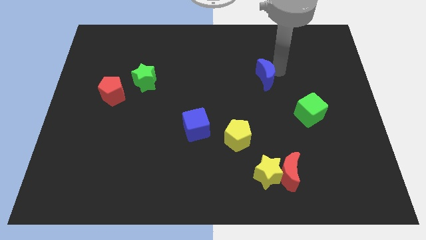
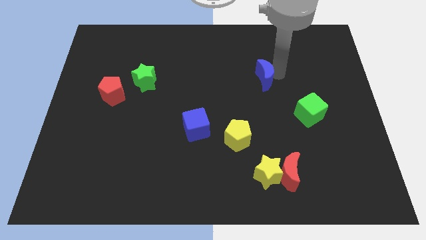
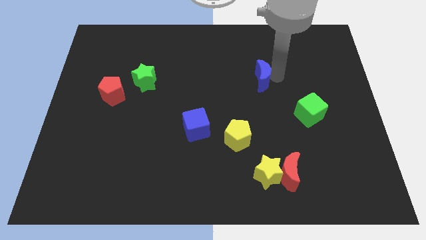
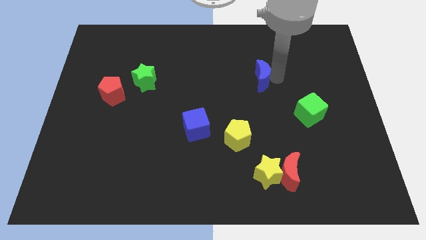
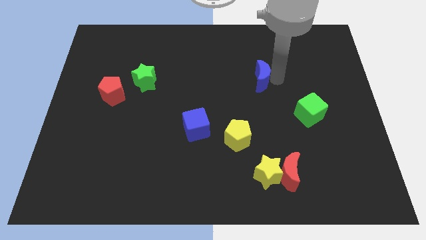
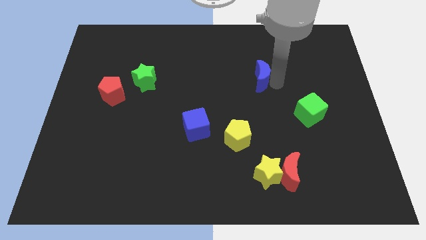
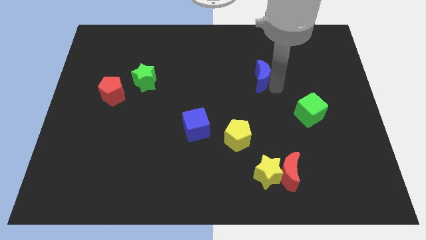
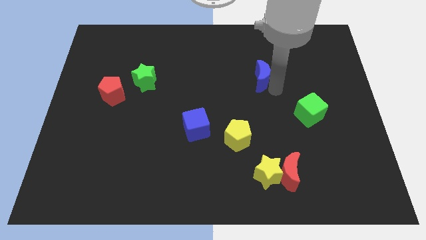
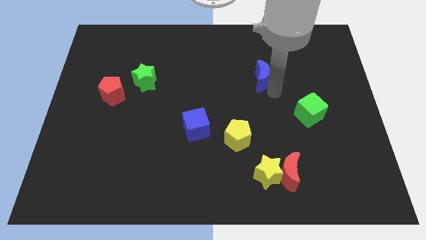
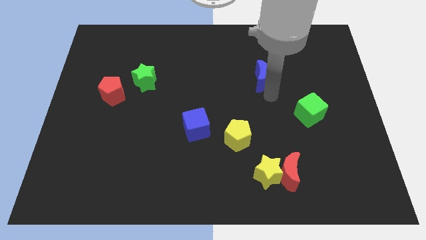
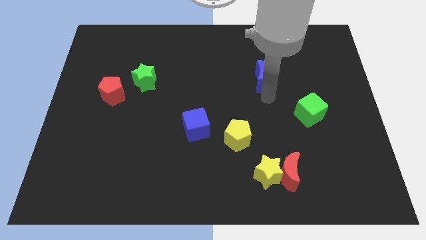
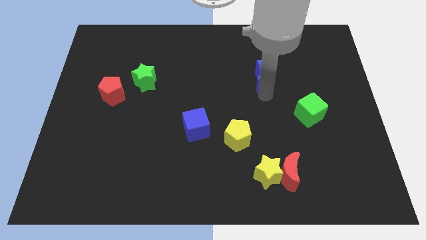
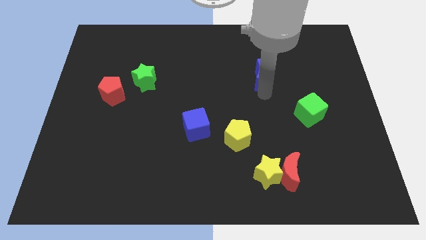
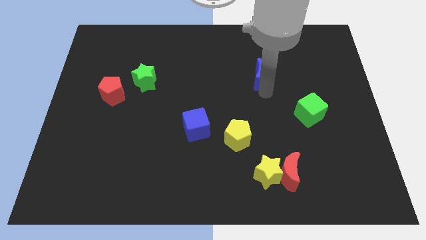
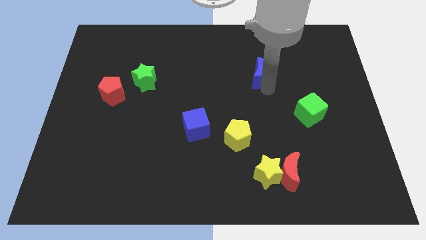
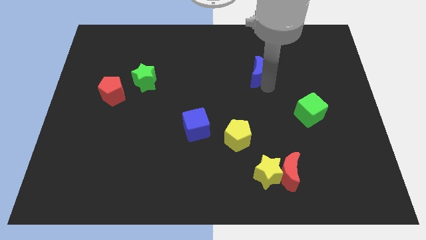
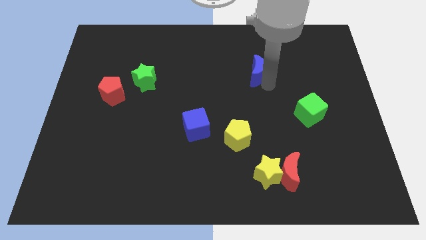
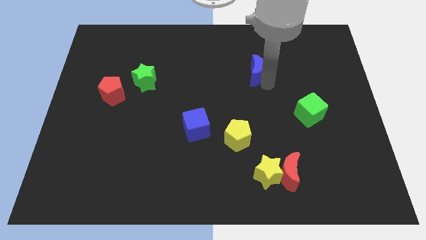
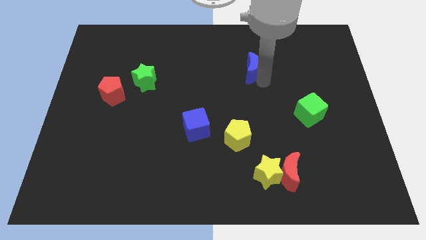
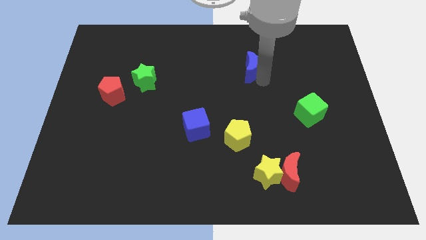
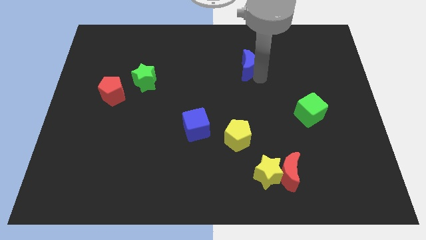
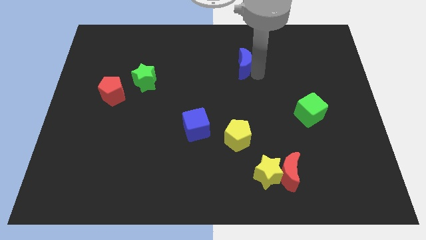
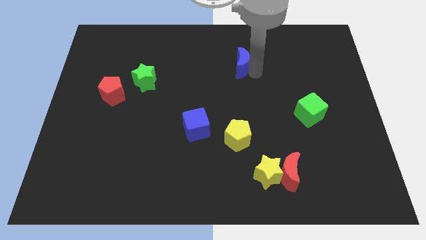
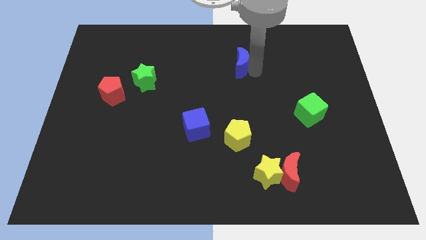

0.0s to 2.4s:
push the blue crescent towards the top side of the board

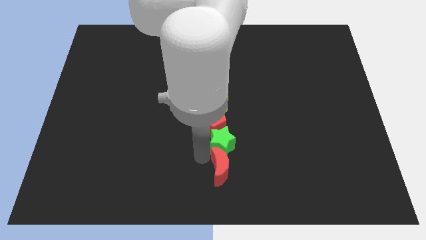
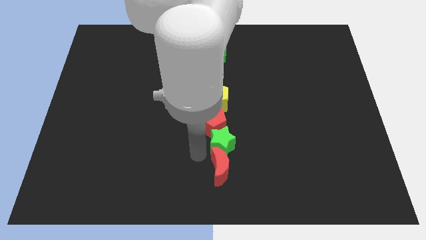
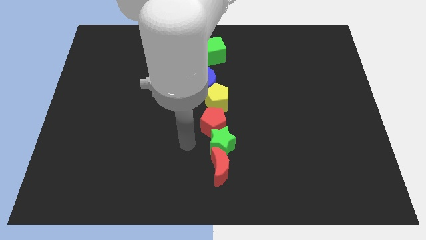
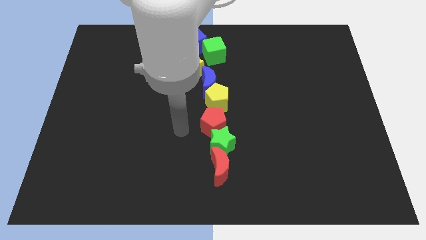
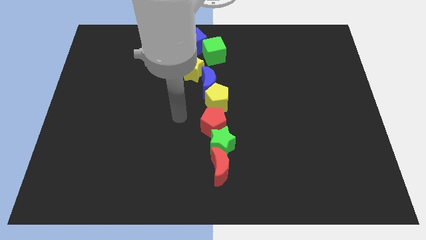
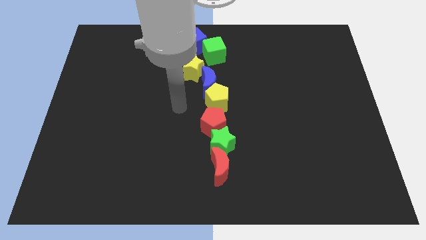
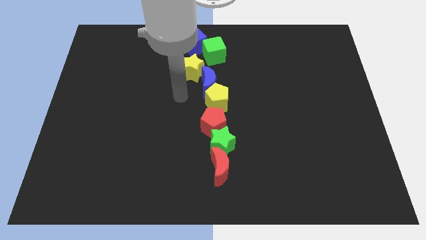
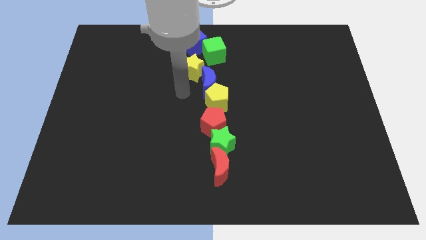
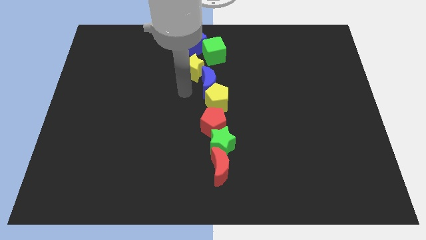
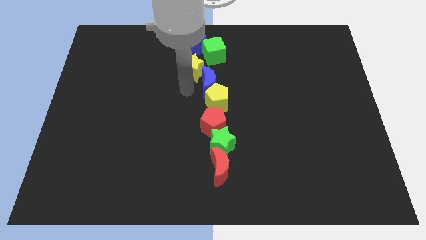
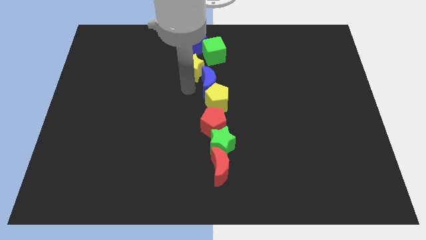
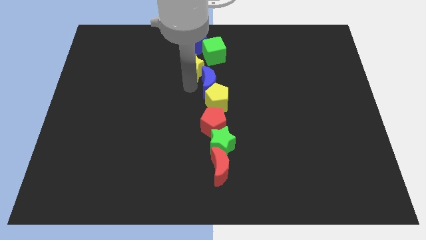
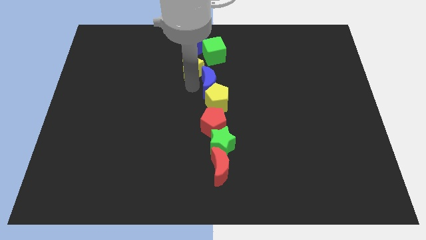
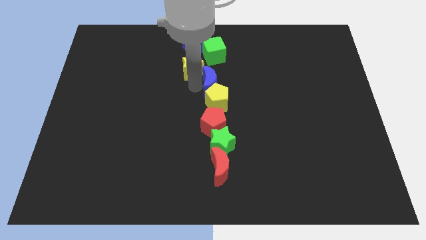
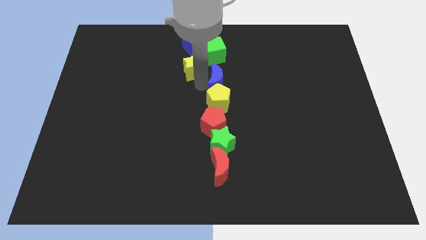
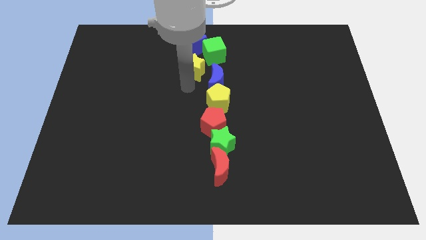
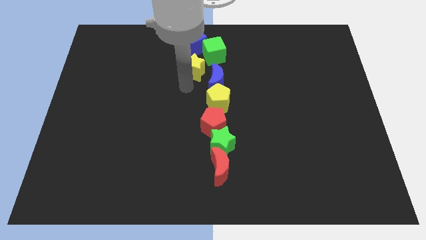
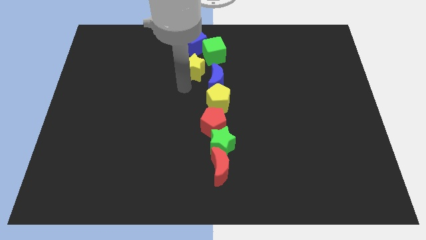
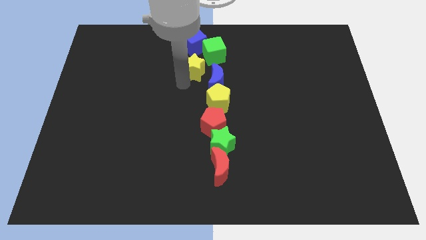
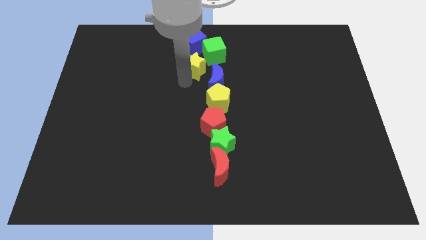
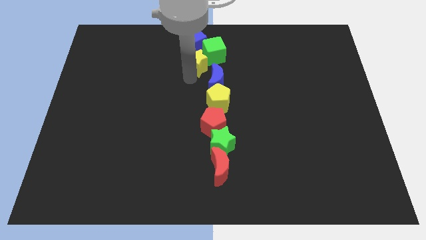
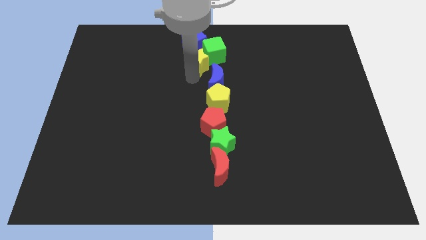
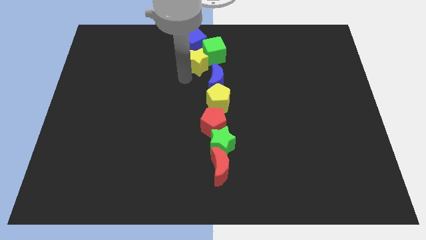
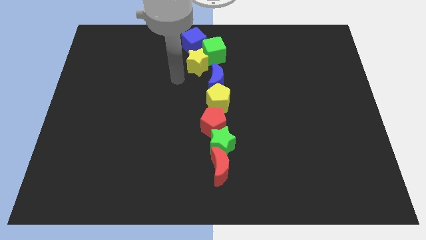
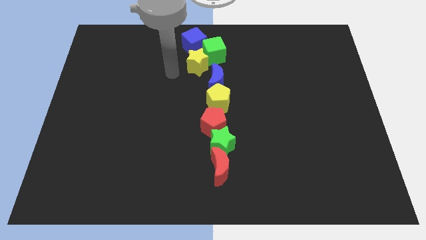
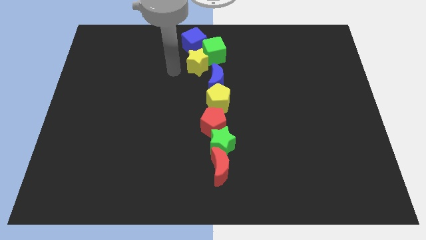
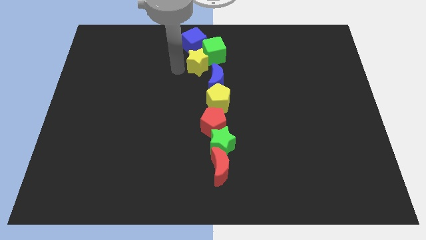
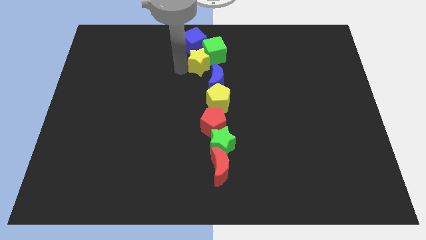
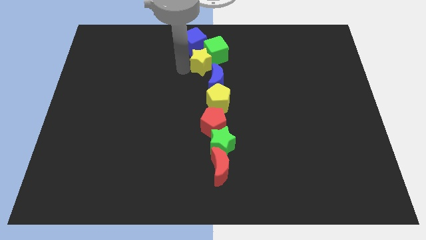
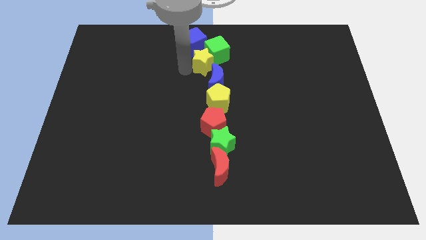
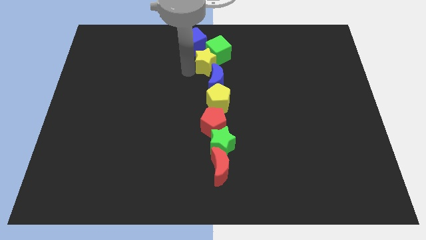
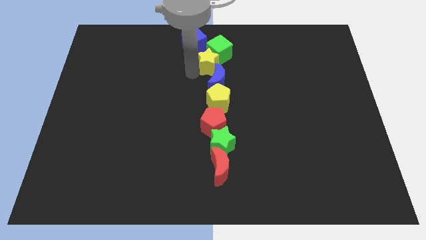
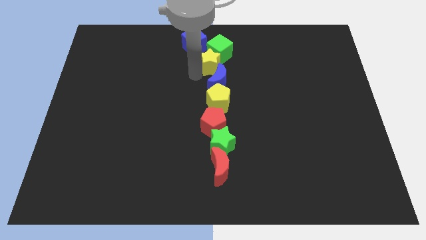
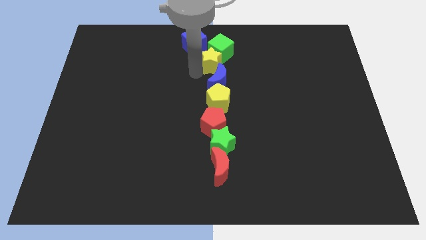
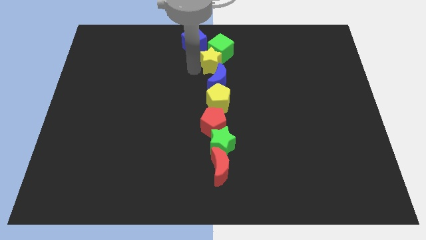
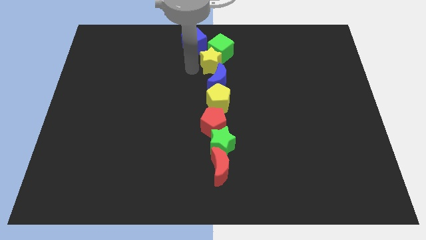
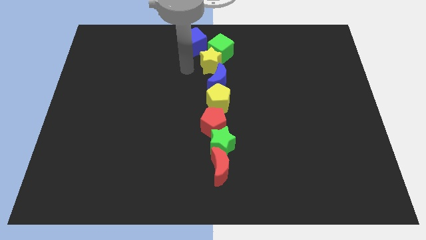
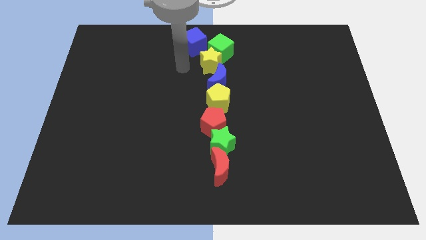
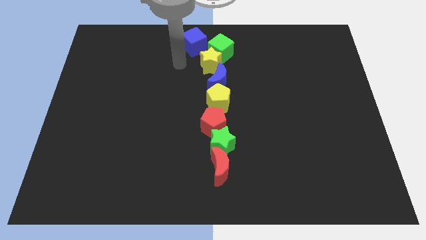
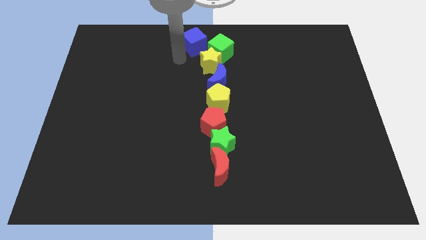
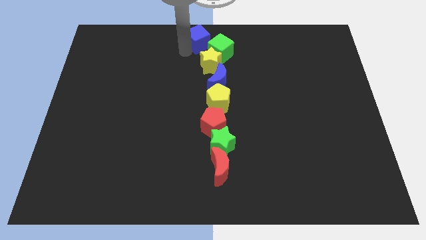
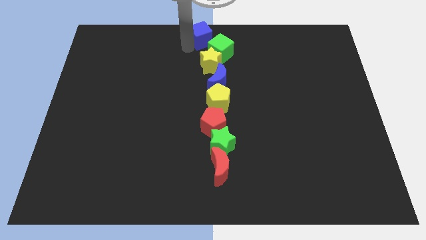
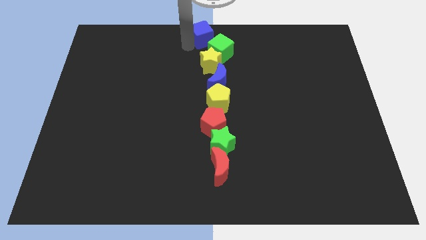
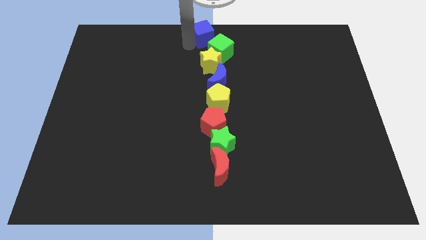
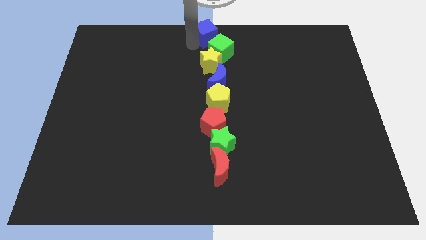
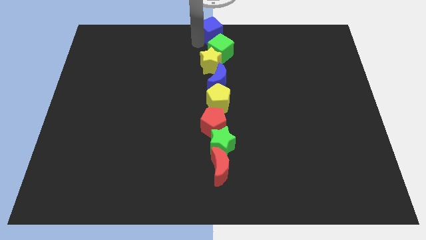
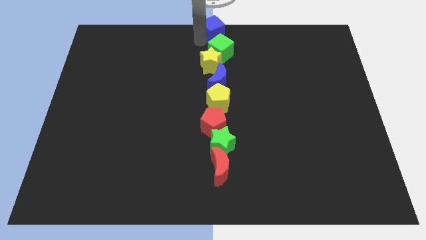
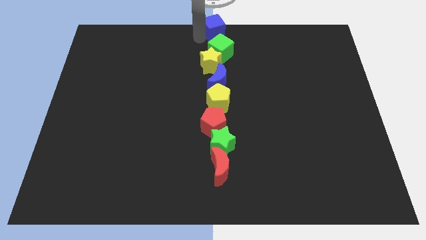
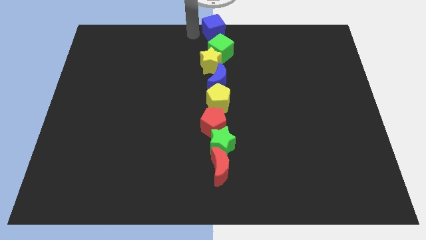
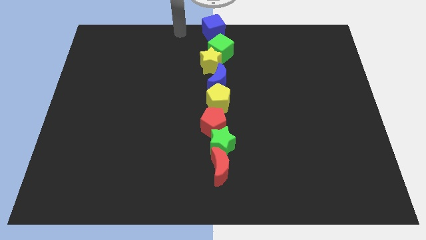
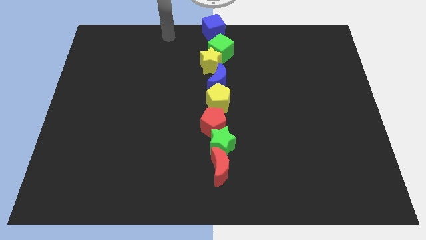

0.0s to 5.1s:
move the blue moon yellow star and blue cube to the right

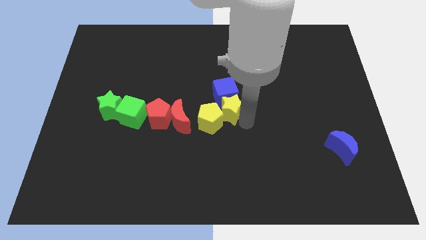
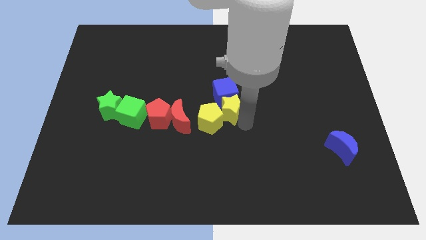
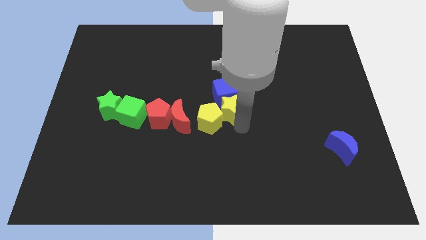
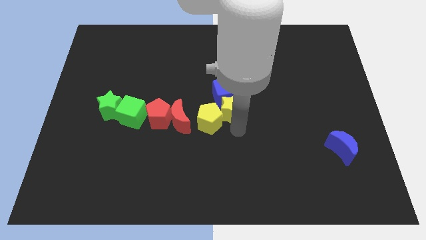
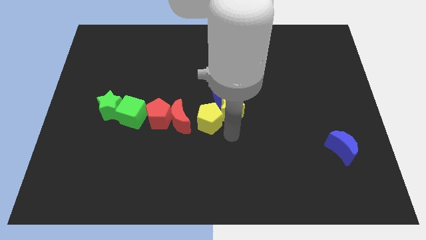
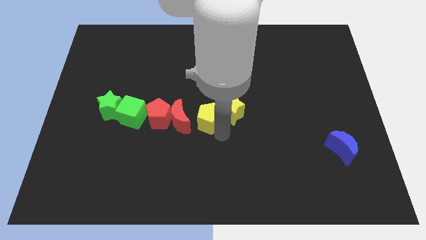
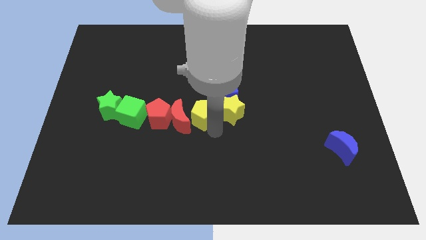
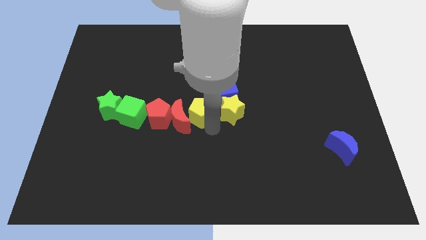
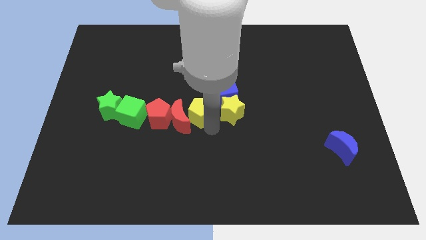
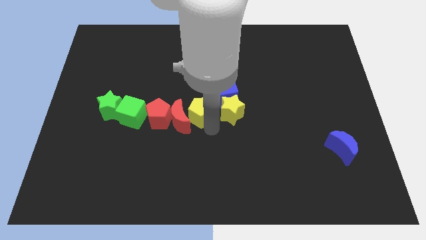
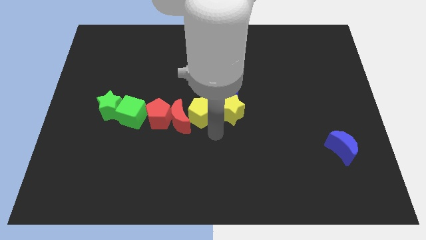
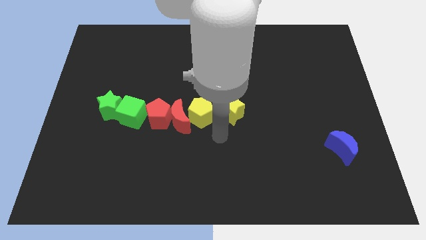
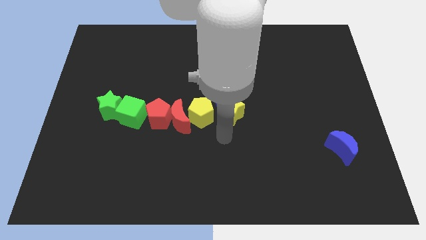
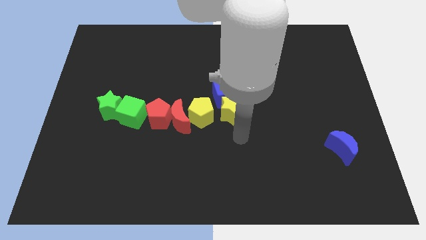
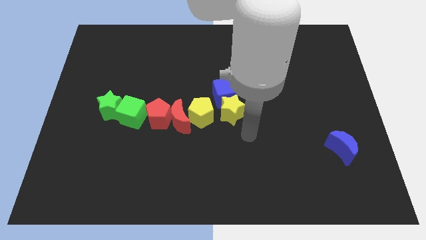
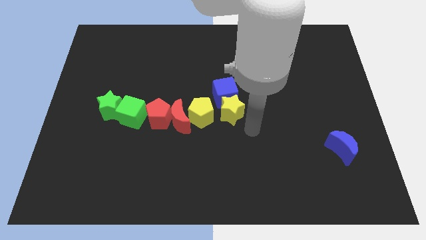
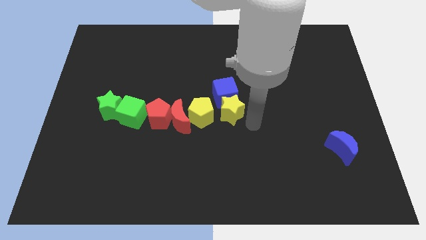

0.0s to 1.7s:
place the yellow blocks to the right side of the red blocks
